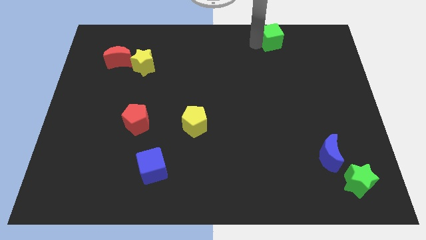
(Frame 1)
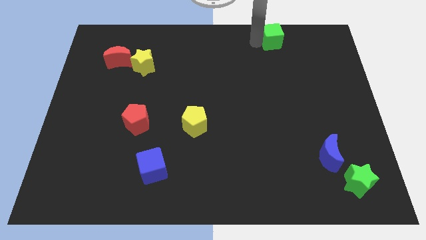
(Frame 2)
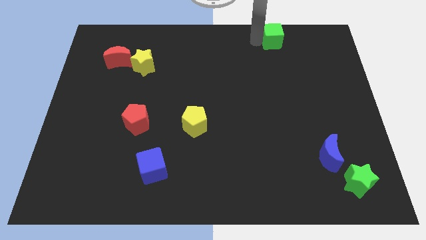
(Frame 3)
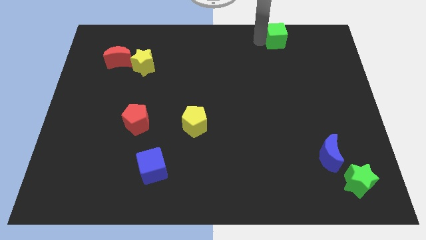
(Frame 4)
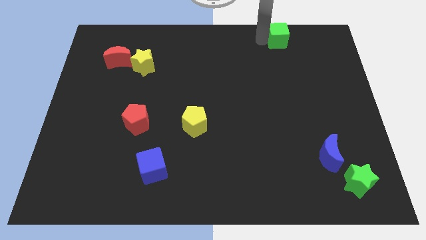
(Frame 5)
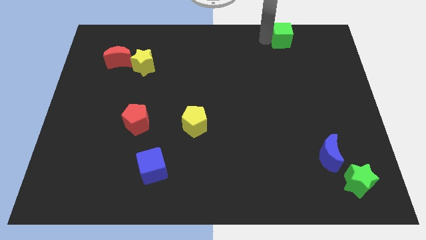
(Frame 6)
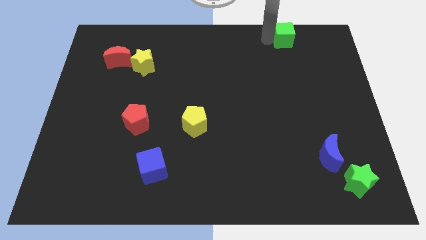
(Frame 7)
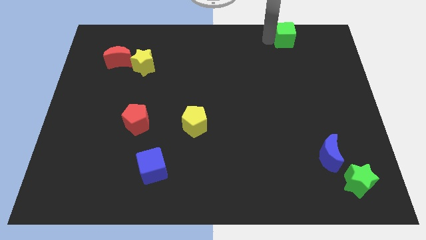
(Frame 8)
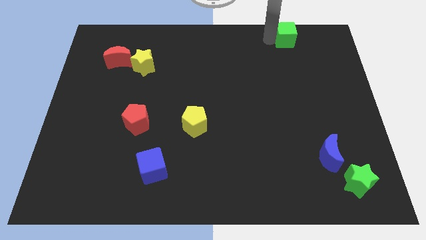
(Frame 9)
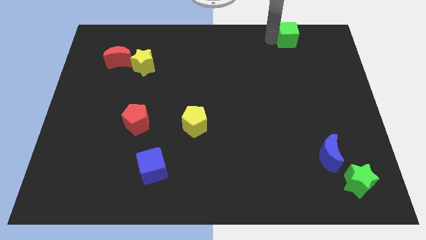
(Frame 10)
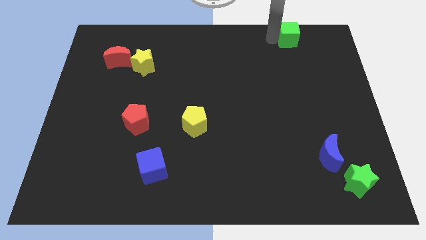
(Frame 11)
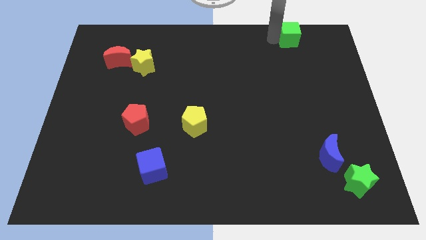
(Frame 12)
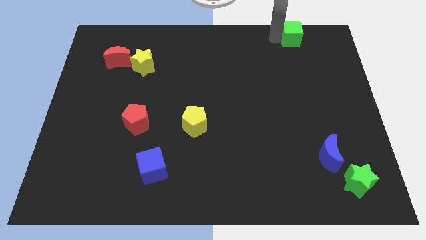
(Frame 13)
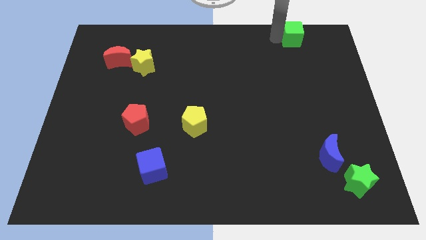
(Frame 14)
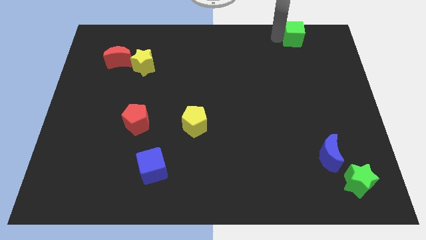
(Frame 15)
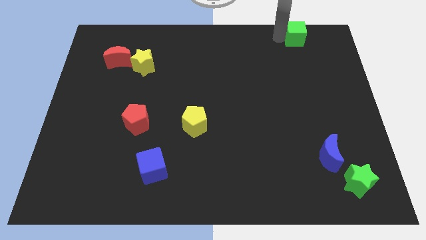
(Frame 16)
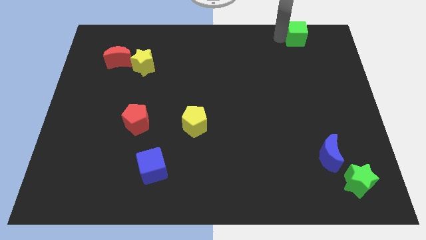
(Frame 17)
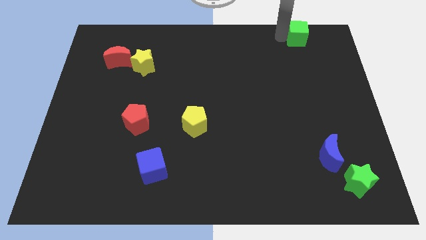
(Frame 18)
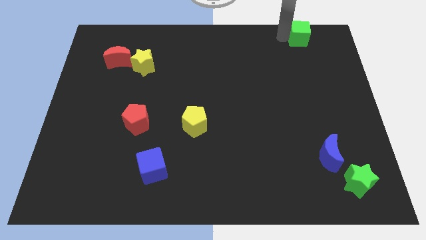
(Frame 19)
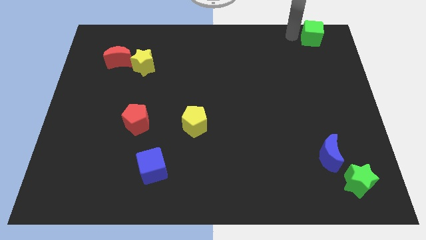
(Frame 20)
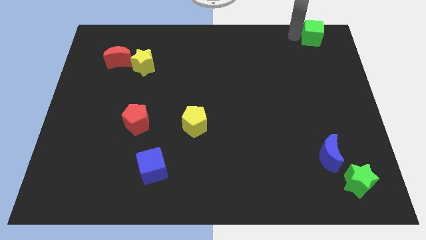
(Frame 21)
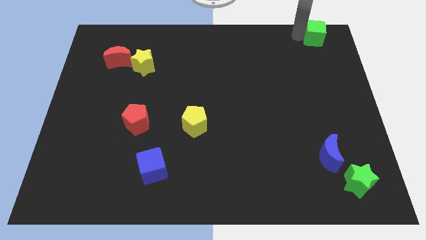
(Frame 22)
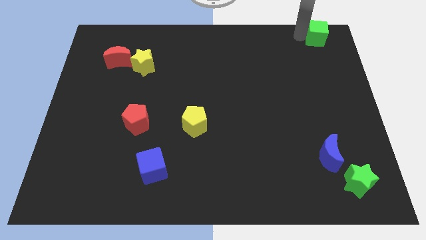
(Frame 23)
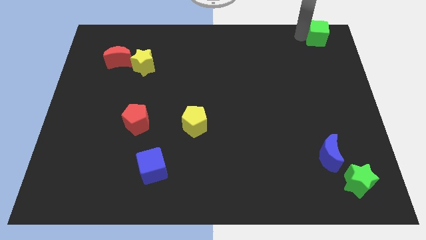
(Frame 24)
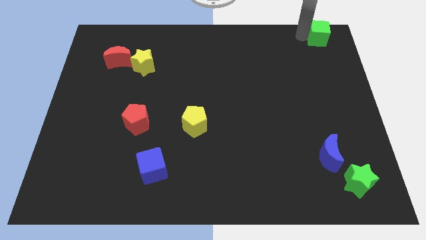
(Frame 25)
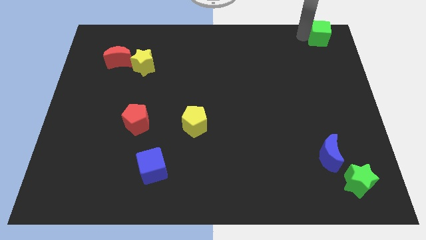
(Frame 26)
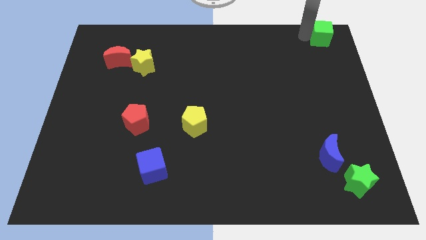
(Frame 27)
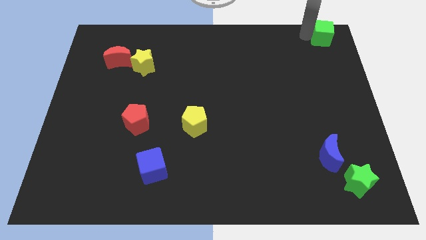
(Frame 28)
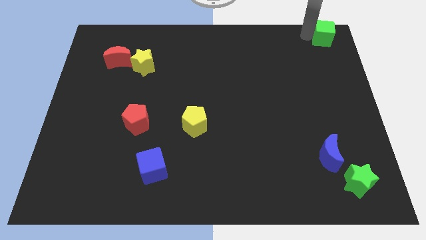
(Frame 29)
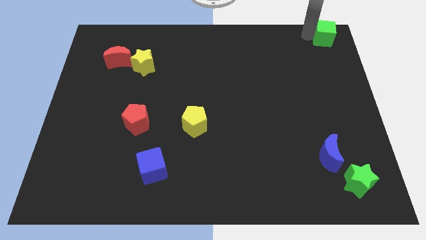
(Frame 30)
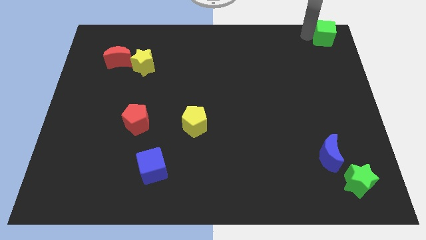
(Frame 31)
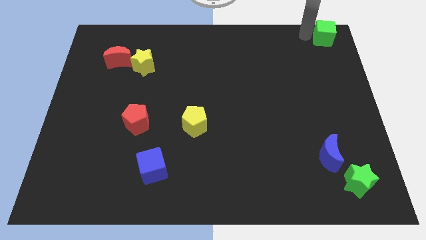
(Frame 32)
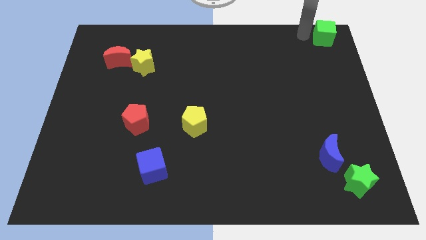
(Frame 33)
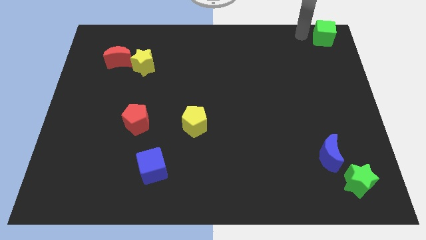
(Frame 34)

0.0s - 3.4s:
push green cube towards top right side of the board

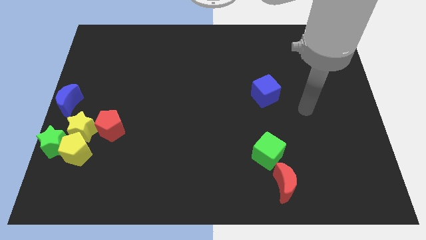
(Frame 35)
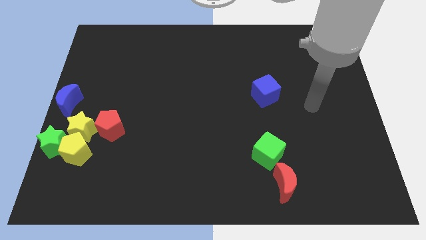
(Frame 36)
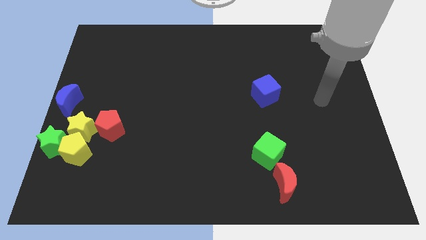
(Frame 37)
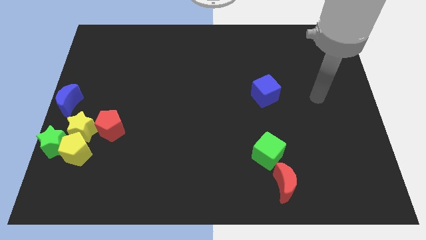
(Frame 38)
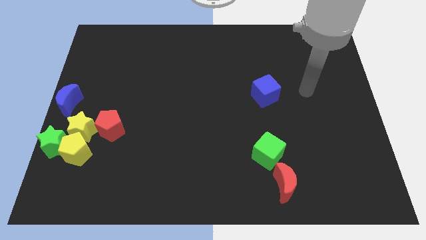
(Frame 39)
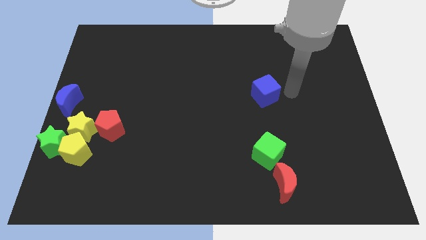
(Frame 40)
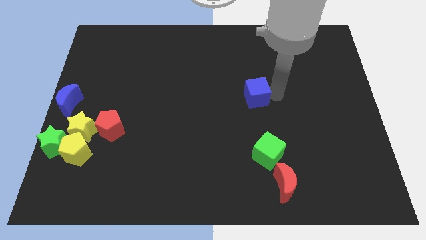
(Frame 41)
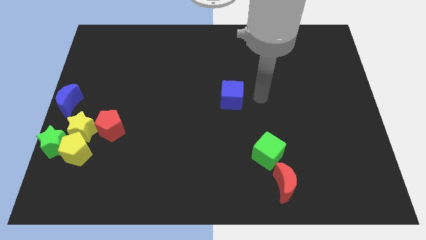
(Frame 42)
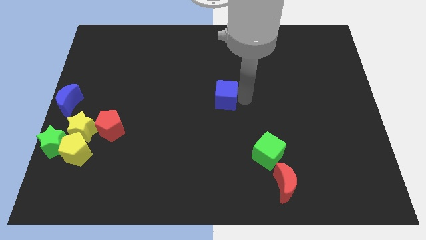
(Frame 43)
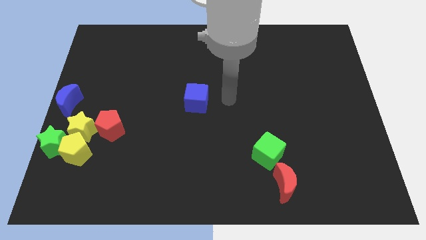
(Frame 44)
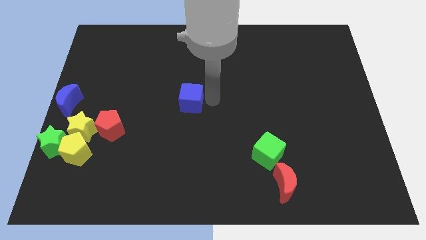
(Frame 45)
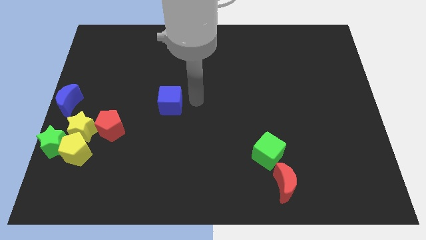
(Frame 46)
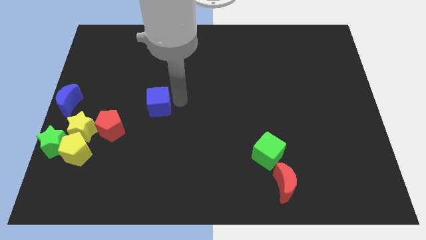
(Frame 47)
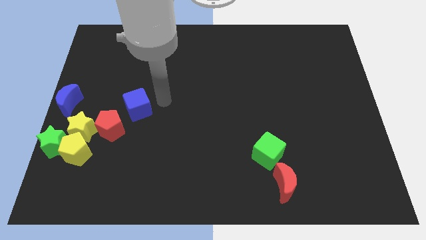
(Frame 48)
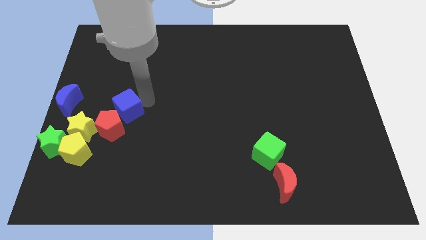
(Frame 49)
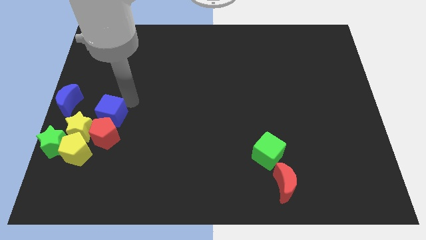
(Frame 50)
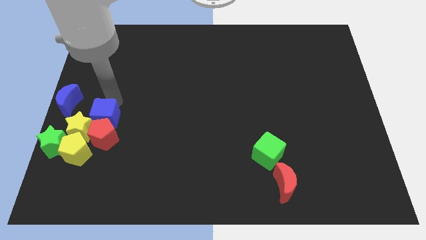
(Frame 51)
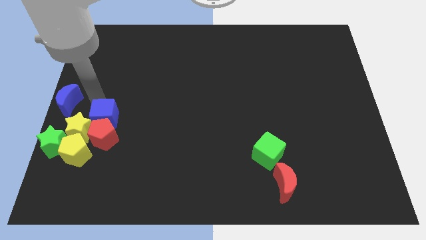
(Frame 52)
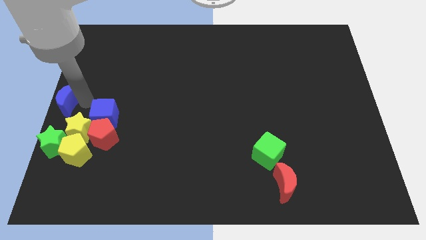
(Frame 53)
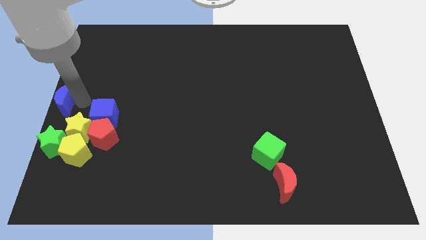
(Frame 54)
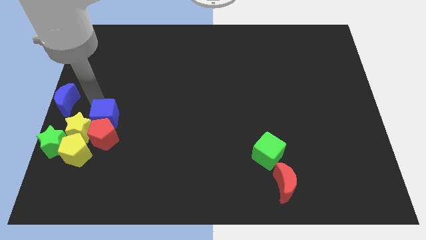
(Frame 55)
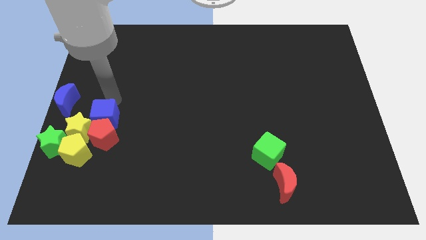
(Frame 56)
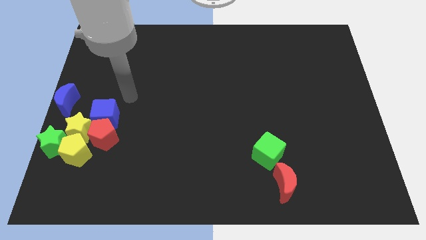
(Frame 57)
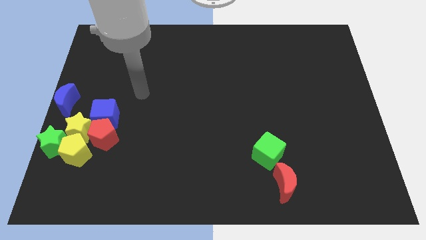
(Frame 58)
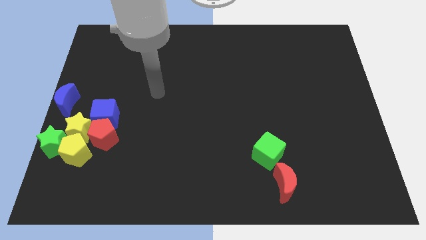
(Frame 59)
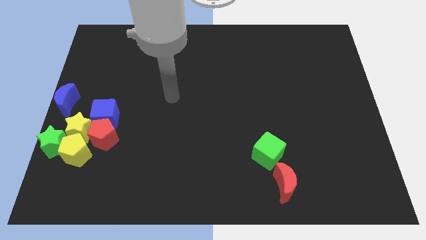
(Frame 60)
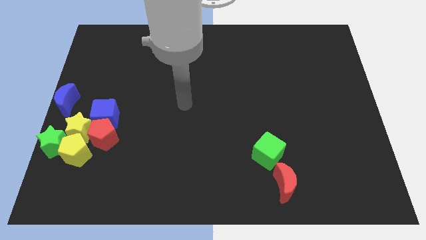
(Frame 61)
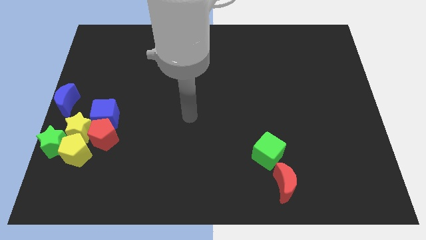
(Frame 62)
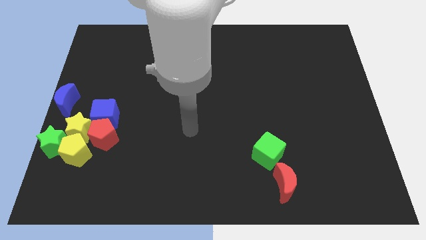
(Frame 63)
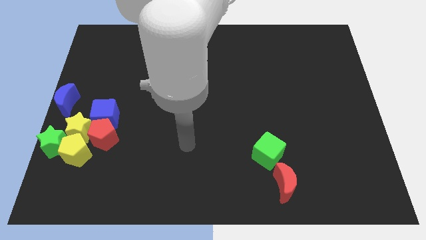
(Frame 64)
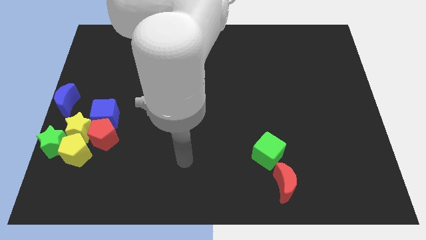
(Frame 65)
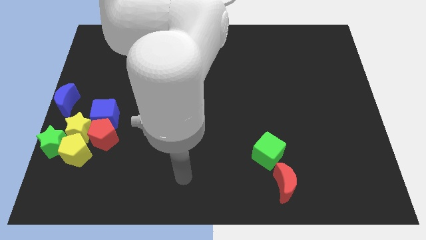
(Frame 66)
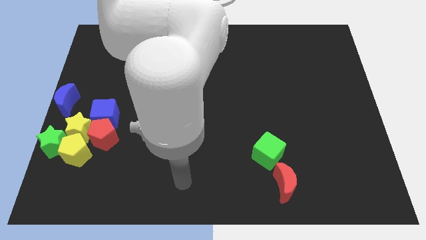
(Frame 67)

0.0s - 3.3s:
place blue cube to the top of red pentagon

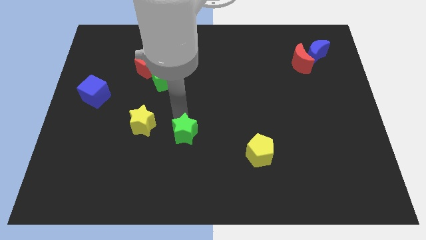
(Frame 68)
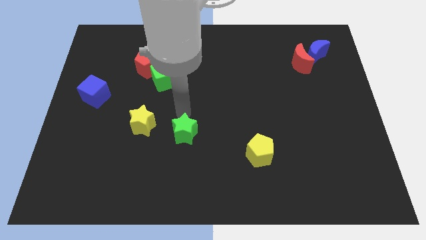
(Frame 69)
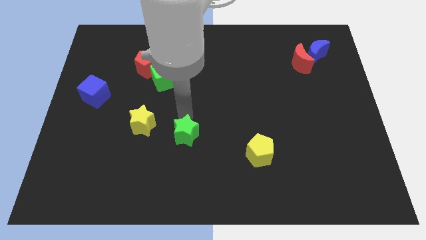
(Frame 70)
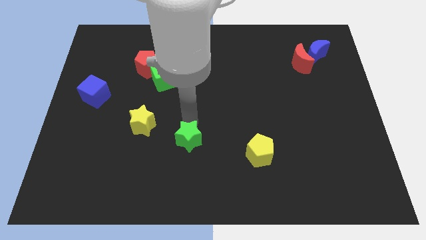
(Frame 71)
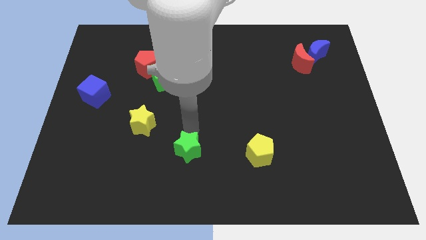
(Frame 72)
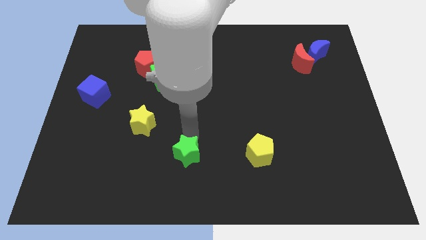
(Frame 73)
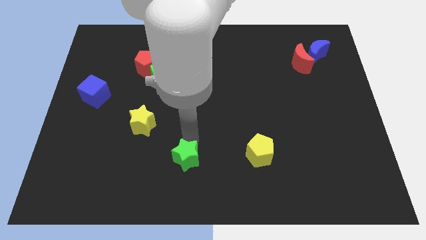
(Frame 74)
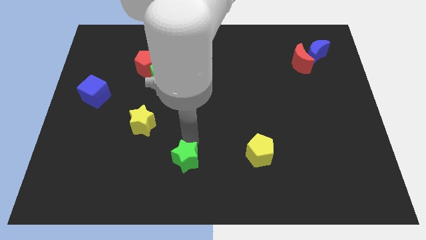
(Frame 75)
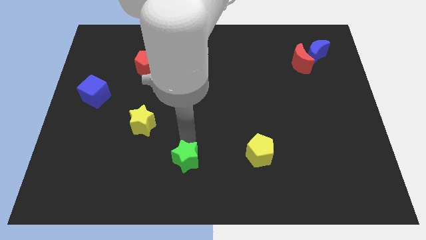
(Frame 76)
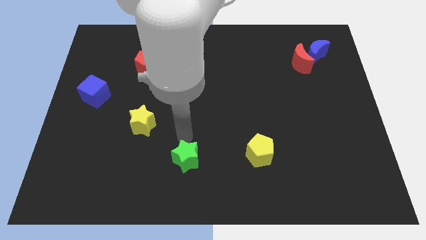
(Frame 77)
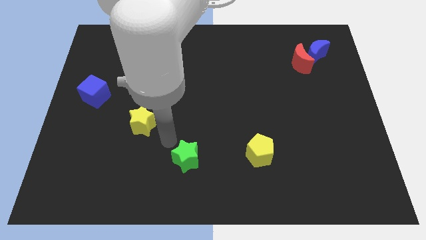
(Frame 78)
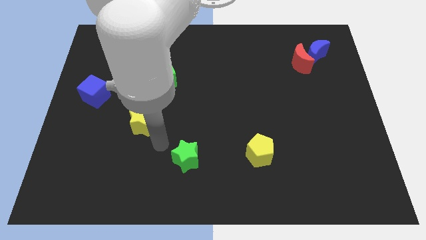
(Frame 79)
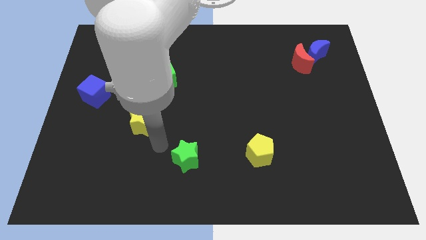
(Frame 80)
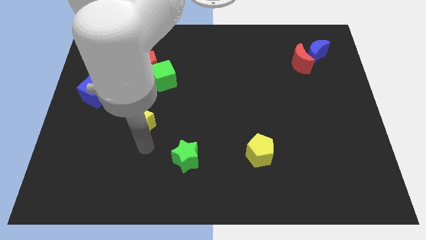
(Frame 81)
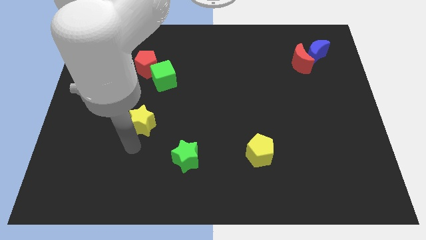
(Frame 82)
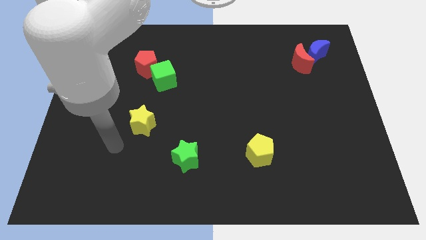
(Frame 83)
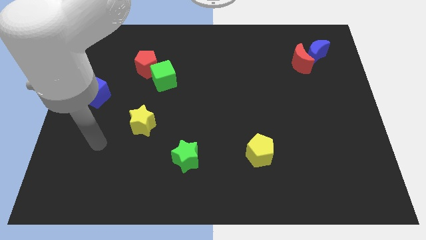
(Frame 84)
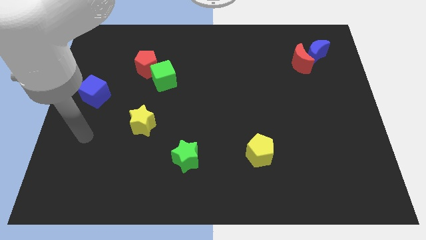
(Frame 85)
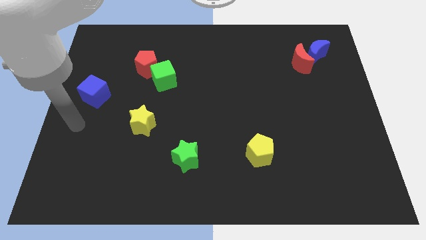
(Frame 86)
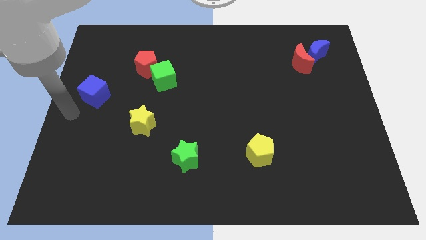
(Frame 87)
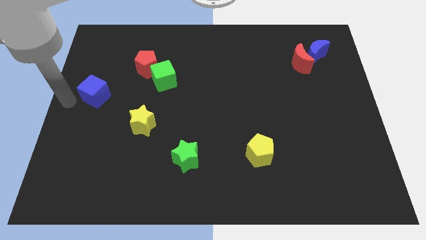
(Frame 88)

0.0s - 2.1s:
move the green star towards the bottom side
